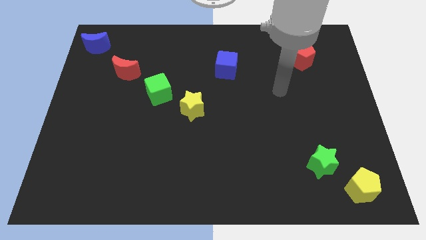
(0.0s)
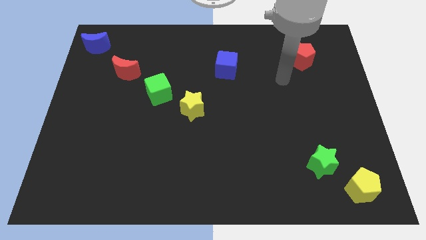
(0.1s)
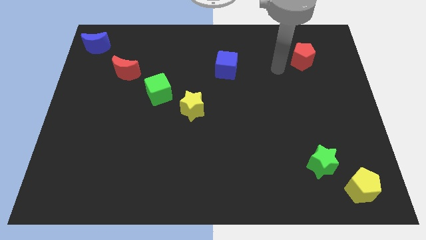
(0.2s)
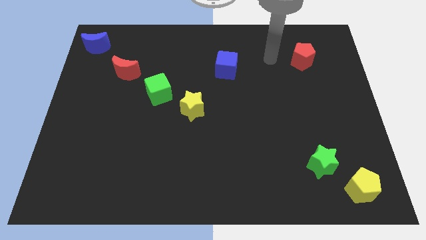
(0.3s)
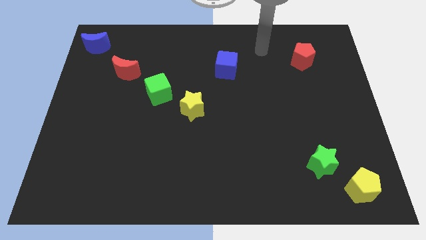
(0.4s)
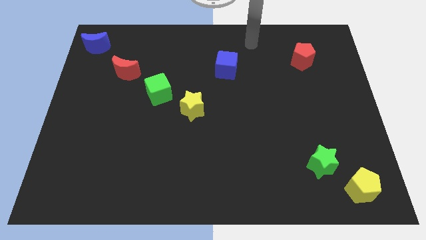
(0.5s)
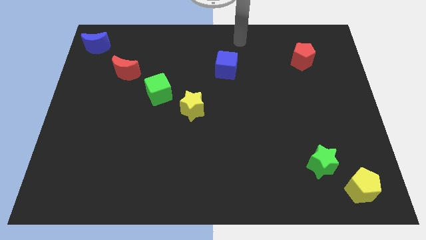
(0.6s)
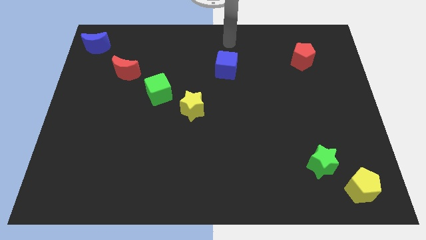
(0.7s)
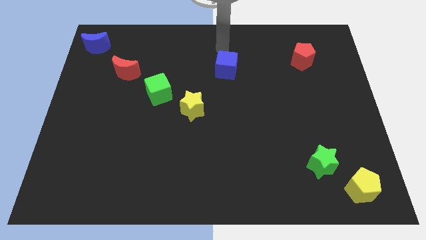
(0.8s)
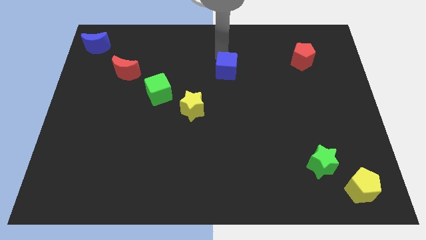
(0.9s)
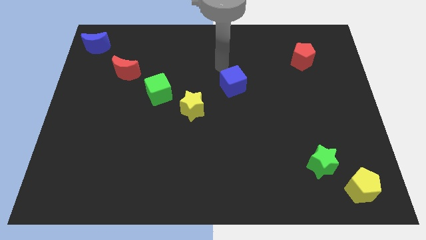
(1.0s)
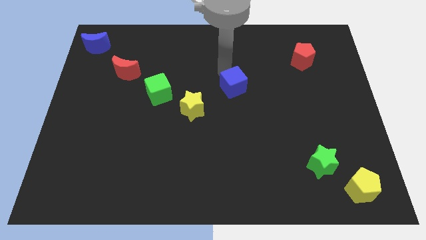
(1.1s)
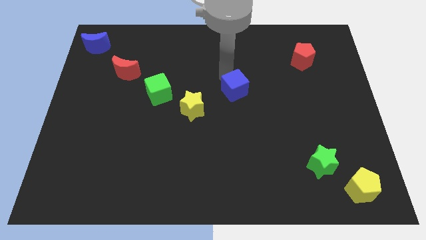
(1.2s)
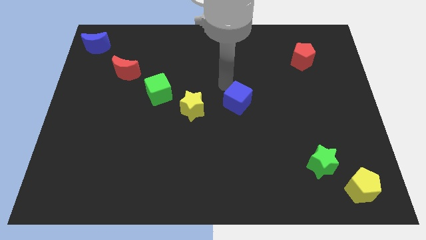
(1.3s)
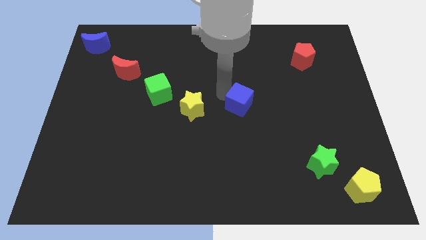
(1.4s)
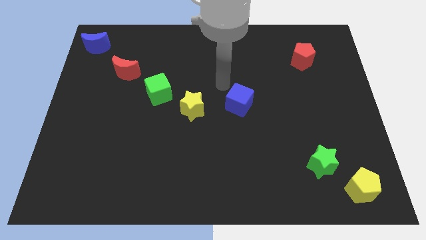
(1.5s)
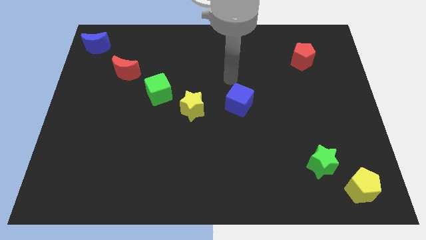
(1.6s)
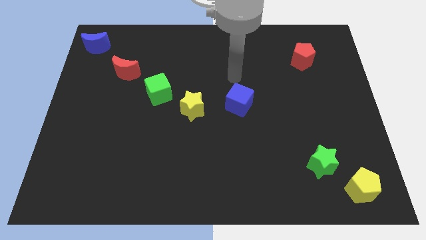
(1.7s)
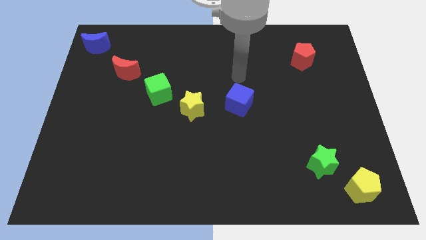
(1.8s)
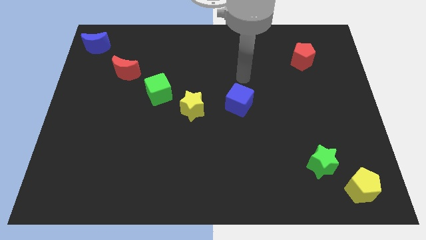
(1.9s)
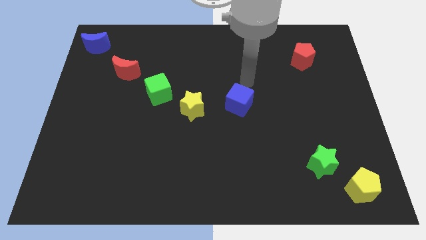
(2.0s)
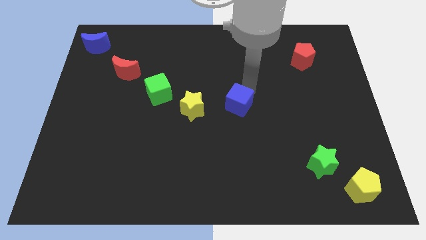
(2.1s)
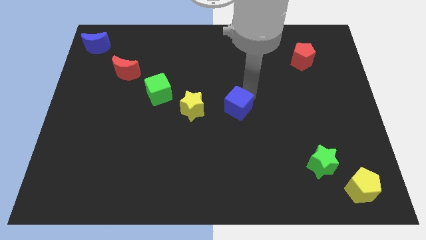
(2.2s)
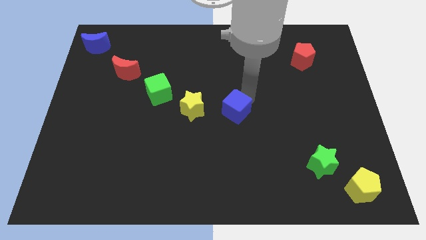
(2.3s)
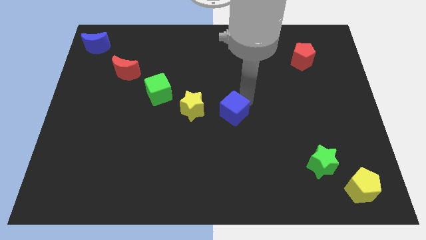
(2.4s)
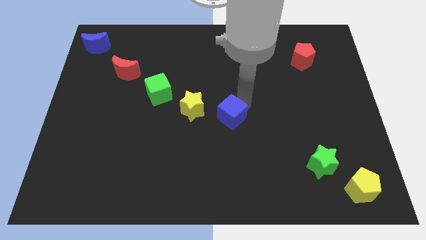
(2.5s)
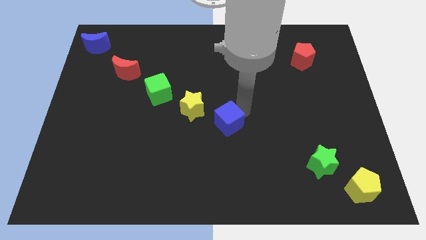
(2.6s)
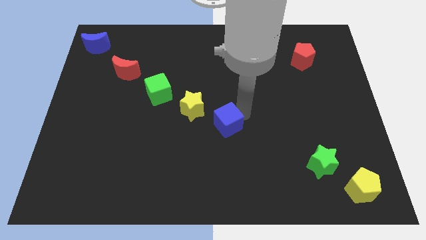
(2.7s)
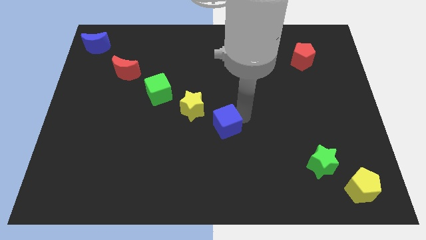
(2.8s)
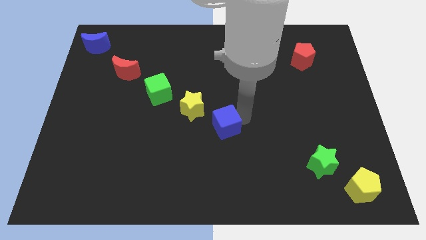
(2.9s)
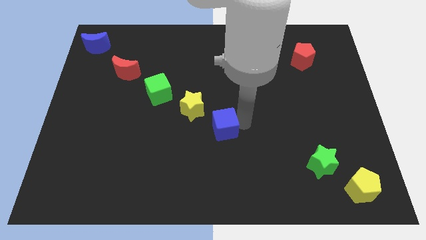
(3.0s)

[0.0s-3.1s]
place blue cube to the bottom right of yellow star

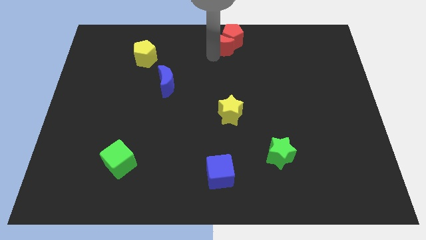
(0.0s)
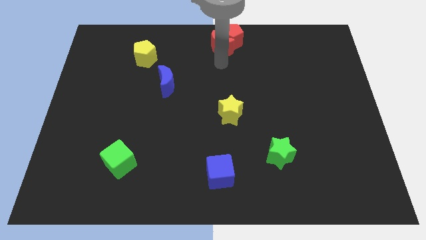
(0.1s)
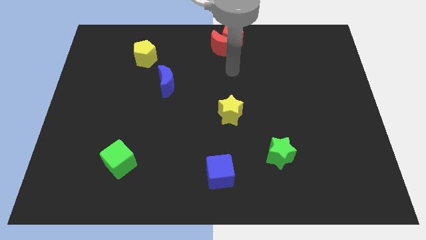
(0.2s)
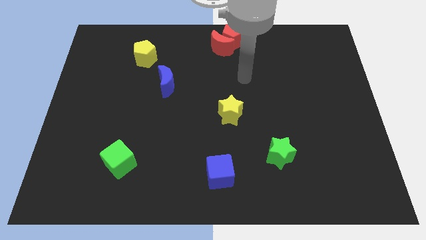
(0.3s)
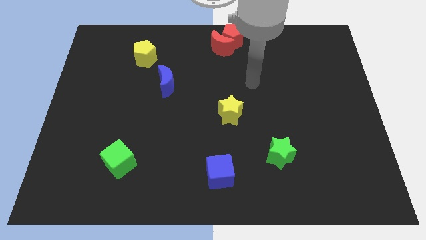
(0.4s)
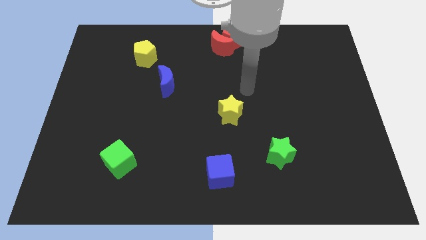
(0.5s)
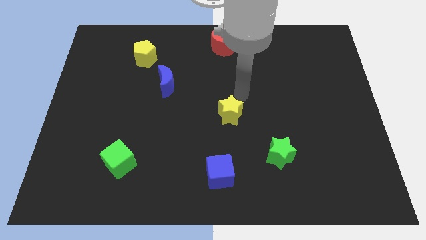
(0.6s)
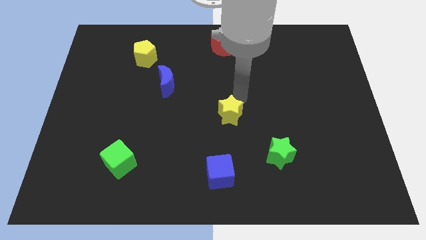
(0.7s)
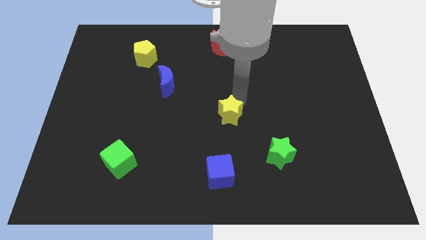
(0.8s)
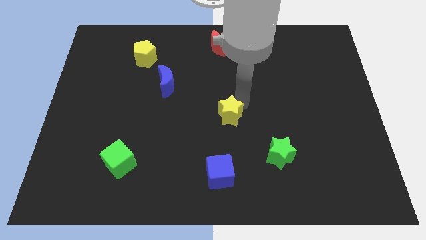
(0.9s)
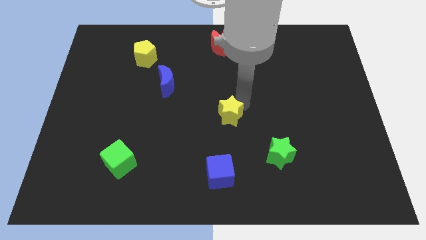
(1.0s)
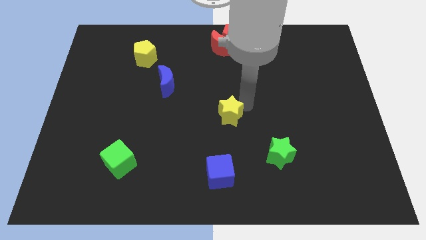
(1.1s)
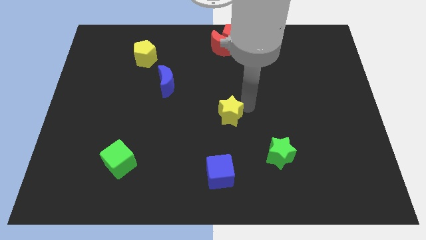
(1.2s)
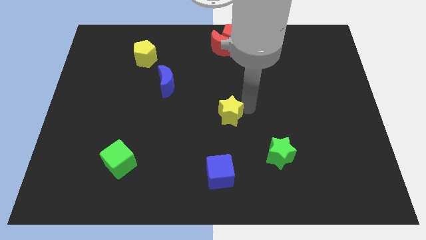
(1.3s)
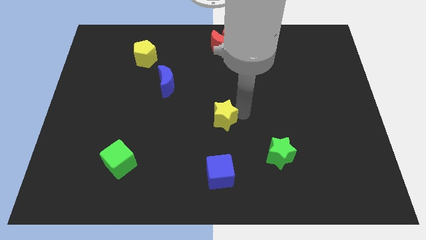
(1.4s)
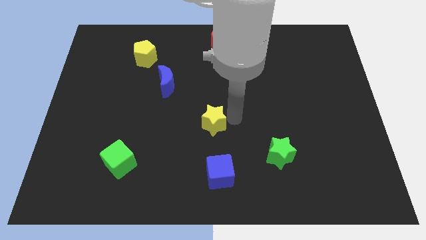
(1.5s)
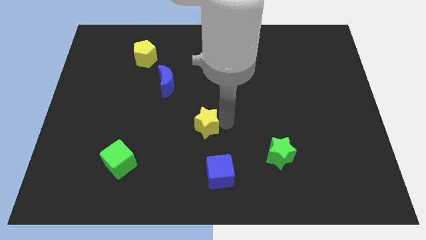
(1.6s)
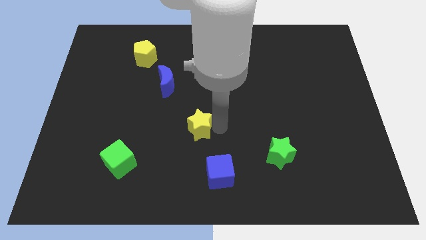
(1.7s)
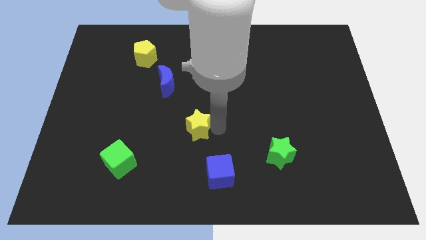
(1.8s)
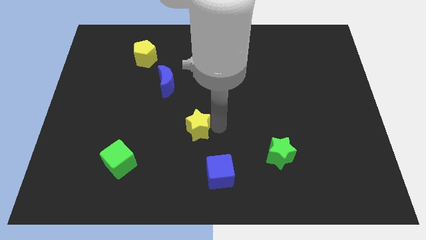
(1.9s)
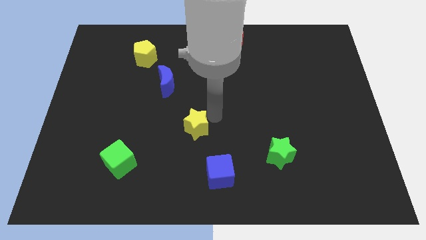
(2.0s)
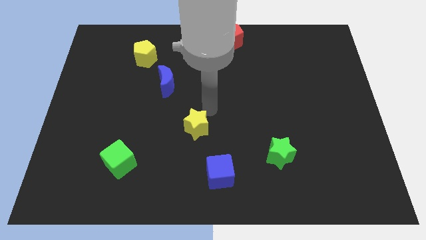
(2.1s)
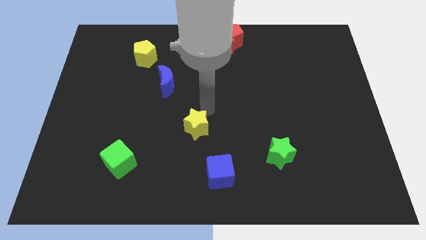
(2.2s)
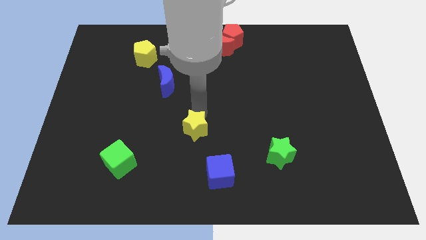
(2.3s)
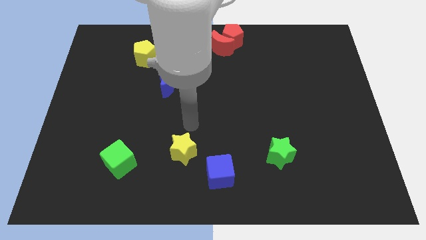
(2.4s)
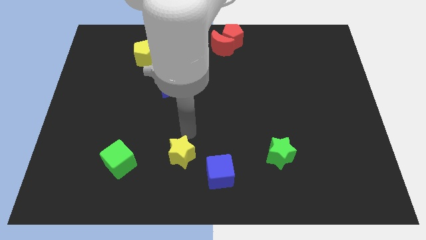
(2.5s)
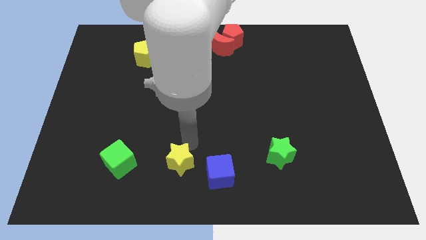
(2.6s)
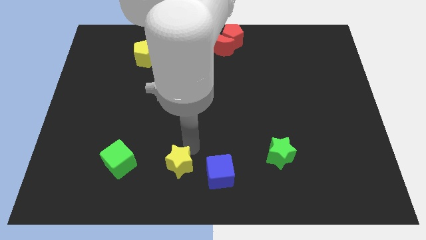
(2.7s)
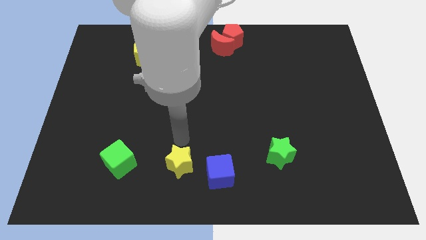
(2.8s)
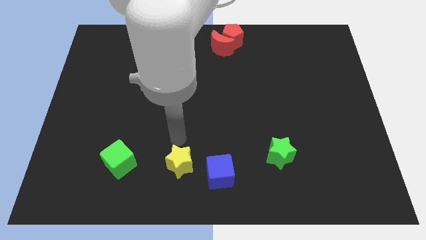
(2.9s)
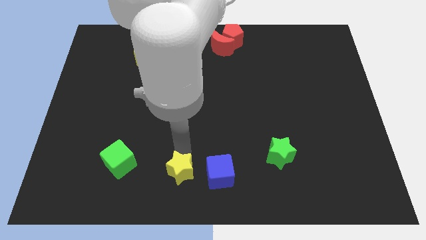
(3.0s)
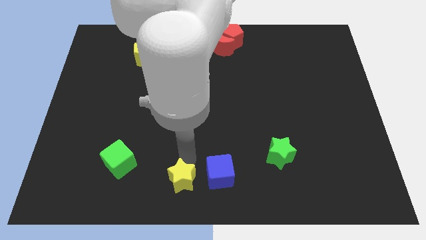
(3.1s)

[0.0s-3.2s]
place yellow star in between green cube and blue cube

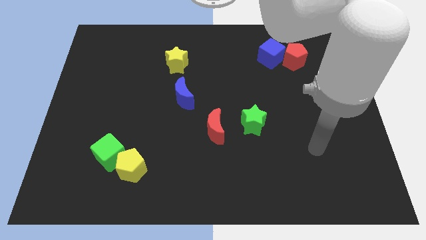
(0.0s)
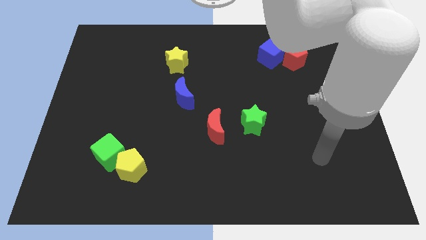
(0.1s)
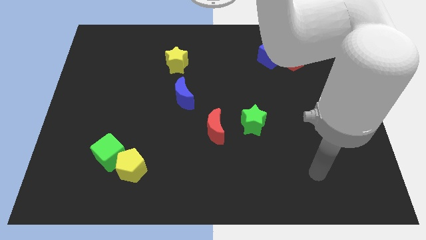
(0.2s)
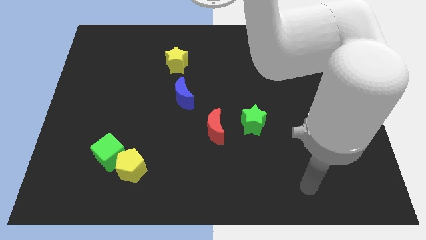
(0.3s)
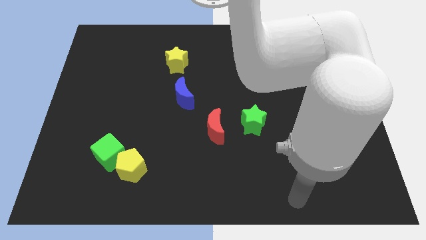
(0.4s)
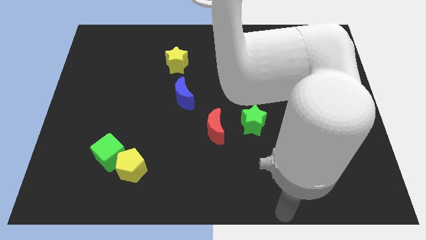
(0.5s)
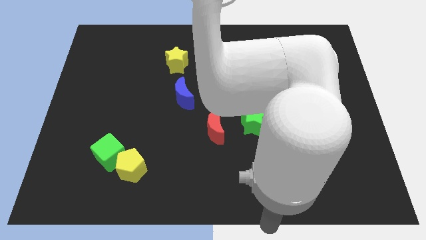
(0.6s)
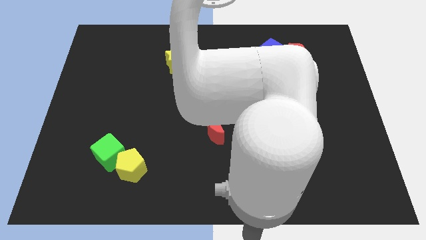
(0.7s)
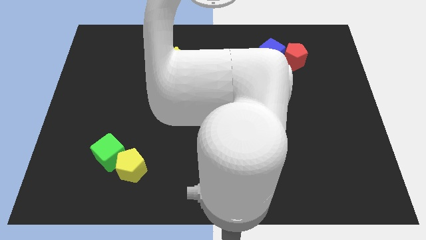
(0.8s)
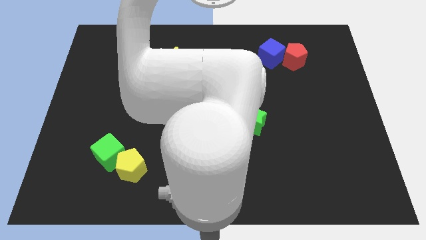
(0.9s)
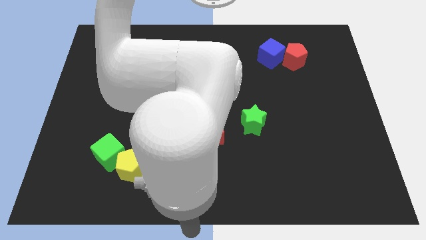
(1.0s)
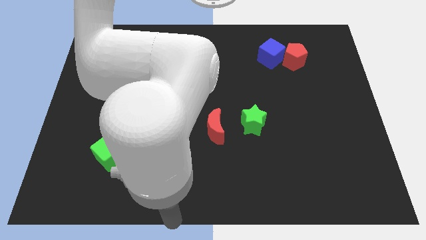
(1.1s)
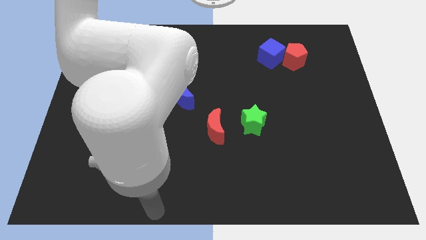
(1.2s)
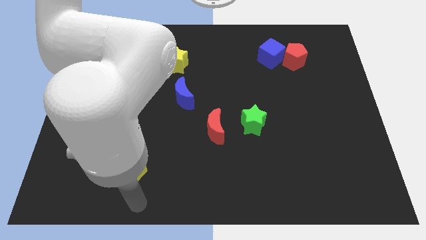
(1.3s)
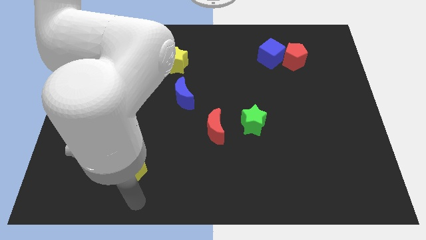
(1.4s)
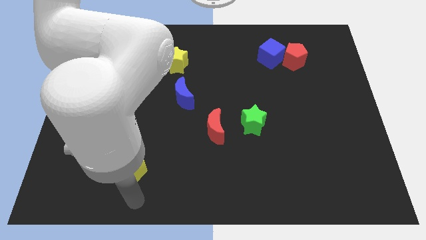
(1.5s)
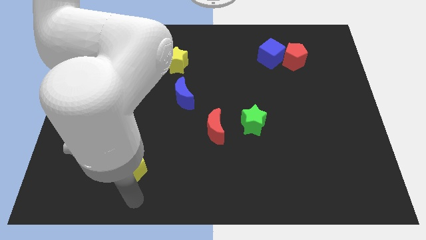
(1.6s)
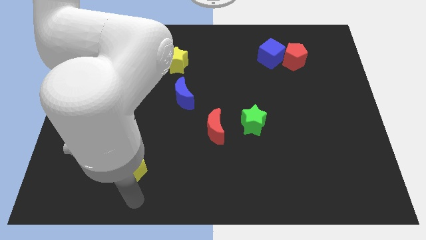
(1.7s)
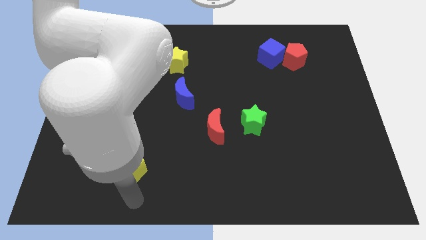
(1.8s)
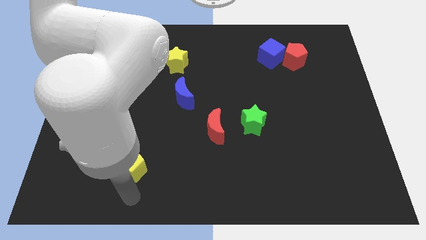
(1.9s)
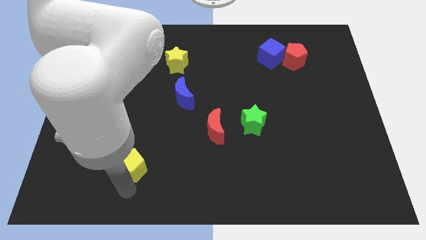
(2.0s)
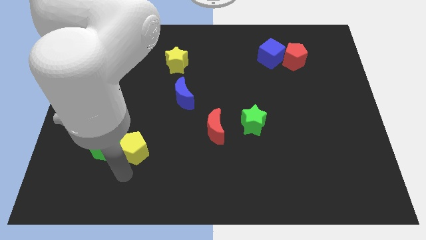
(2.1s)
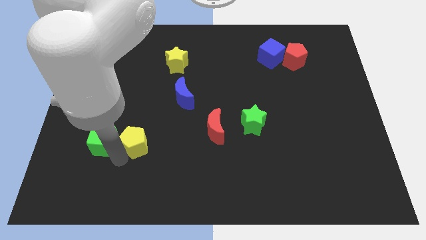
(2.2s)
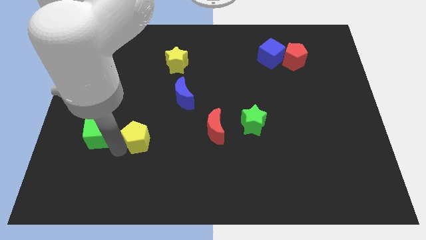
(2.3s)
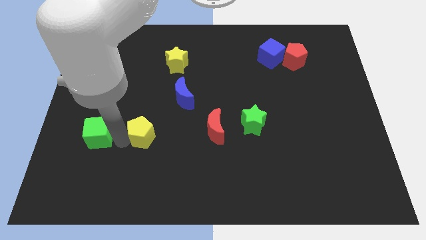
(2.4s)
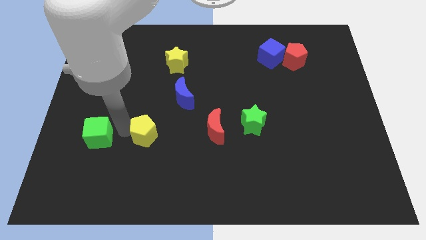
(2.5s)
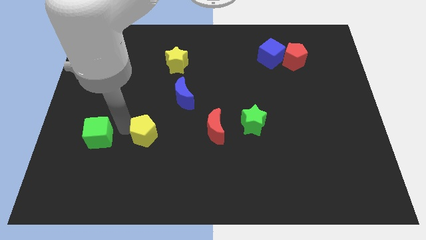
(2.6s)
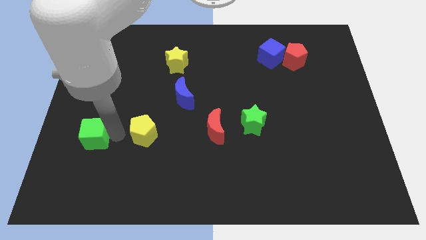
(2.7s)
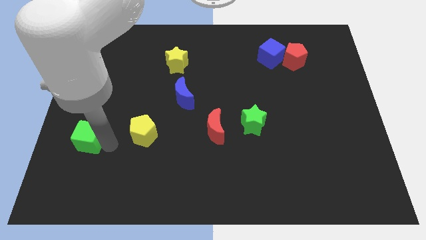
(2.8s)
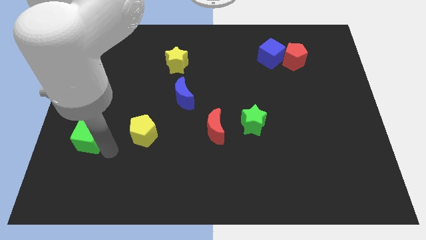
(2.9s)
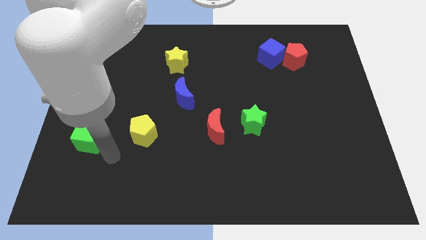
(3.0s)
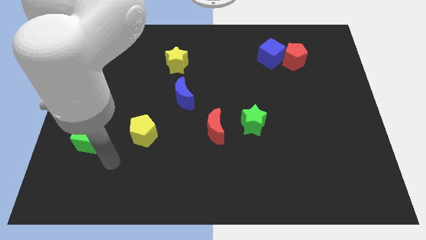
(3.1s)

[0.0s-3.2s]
place the yellow pentagon in between the red moon and green cube
